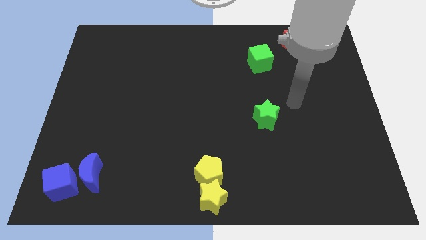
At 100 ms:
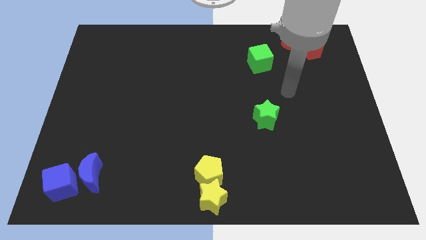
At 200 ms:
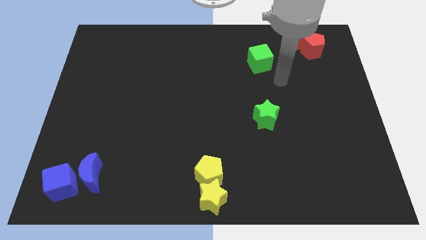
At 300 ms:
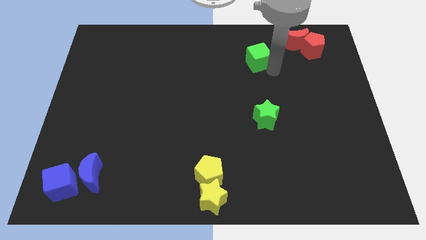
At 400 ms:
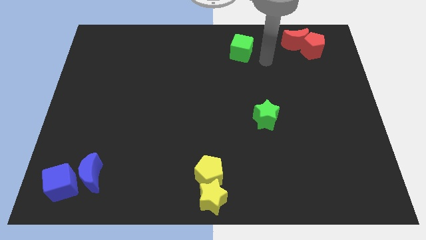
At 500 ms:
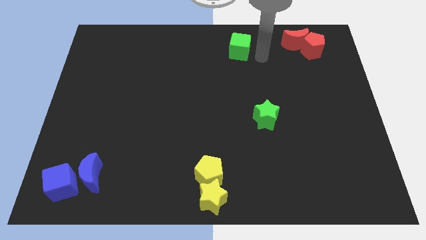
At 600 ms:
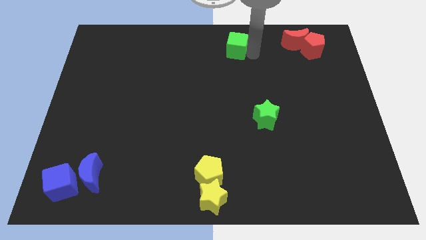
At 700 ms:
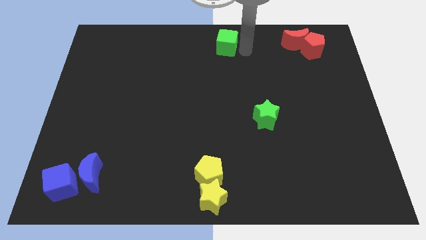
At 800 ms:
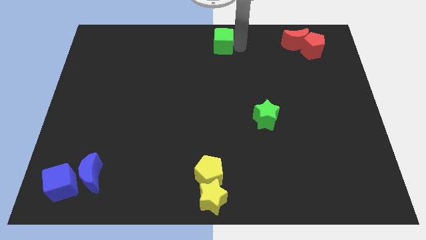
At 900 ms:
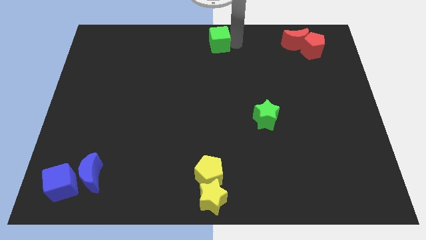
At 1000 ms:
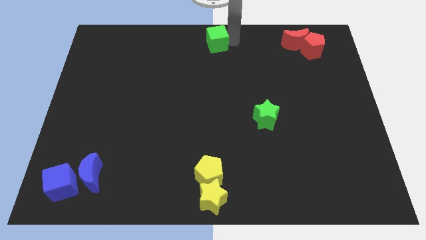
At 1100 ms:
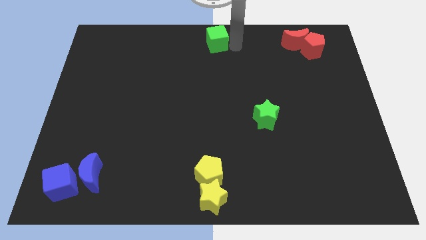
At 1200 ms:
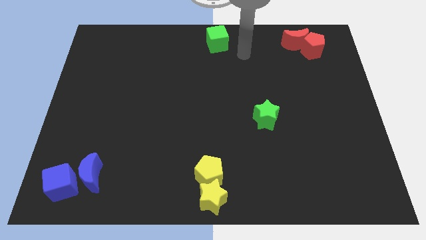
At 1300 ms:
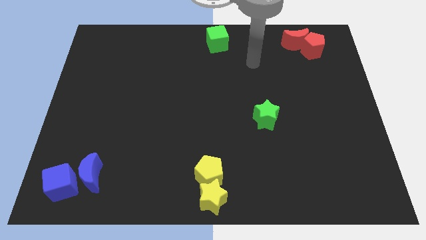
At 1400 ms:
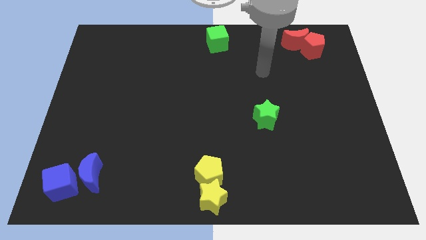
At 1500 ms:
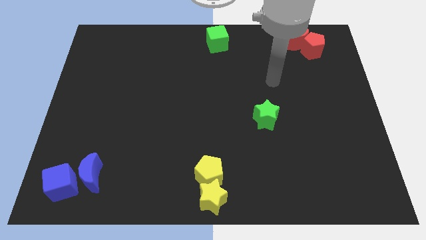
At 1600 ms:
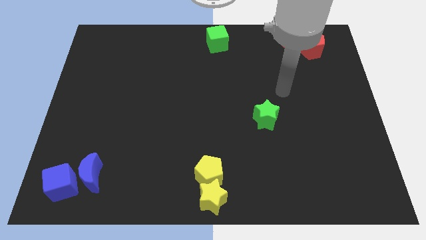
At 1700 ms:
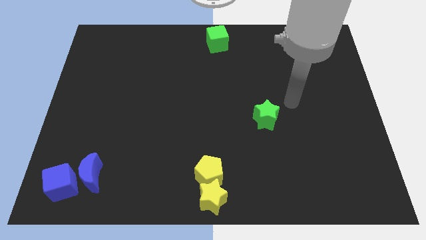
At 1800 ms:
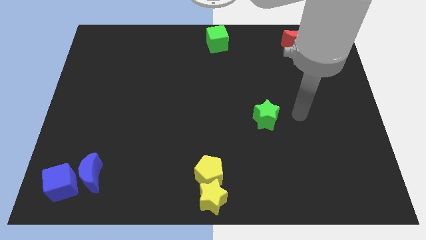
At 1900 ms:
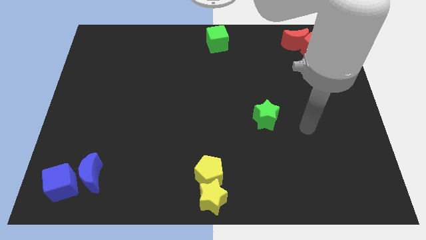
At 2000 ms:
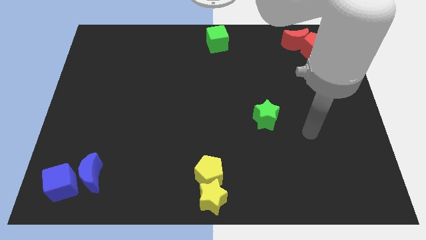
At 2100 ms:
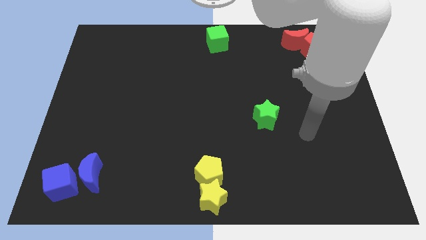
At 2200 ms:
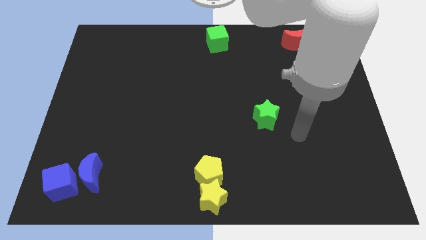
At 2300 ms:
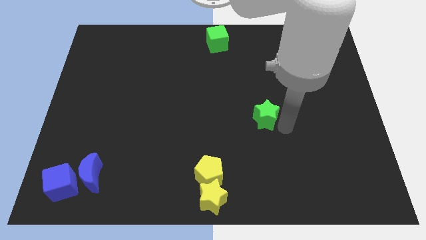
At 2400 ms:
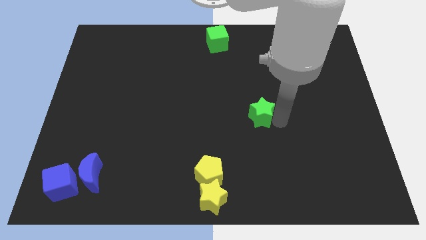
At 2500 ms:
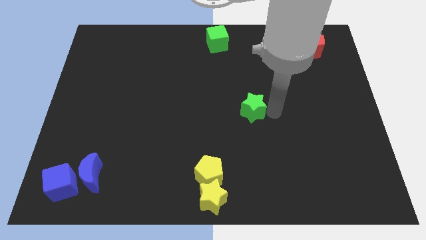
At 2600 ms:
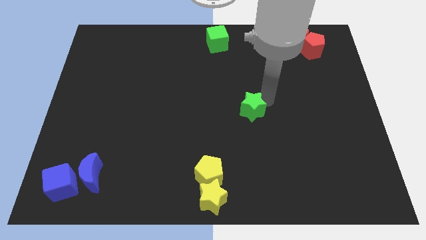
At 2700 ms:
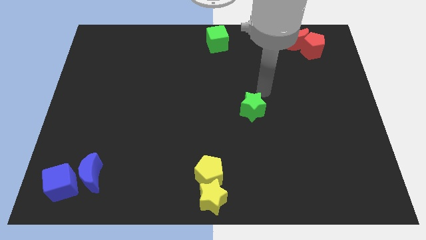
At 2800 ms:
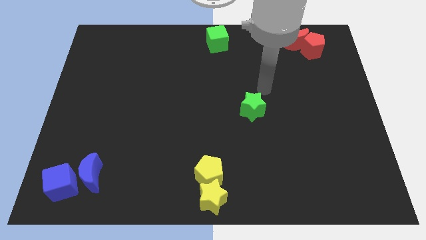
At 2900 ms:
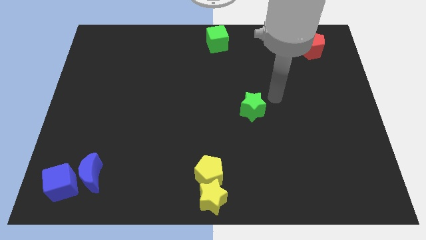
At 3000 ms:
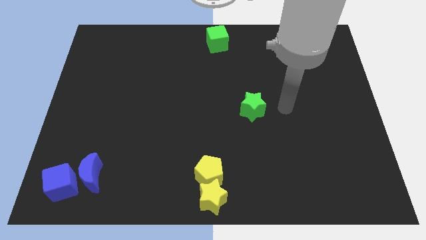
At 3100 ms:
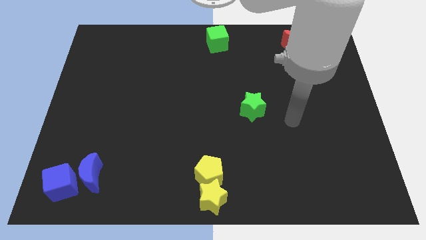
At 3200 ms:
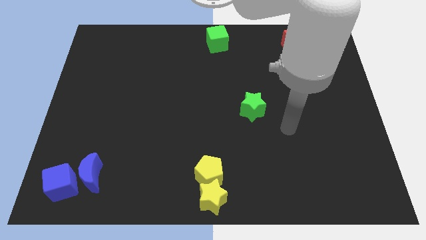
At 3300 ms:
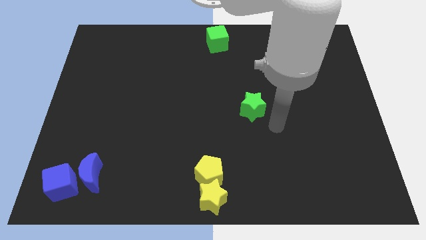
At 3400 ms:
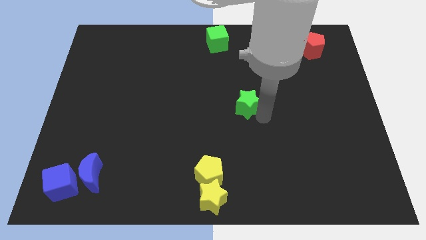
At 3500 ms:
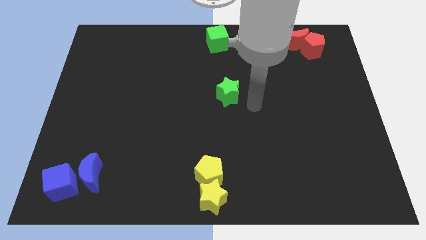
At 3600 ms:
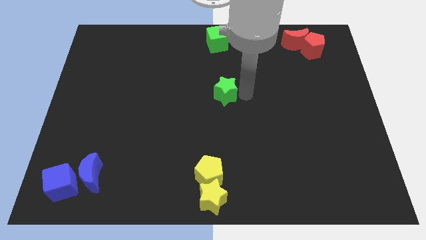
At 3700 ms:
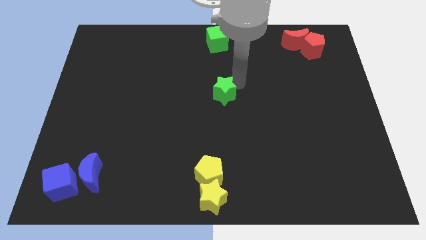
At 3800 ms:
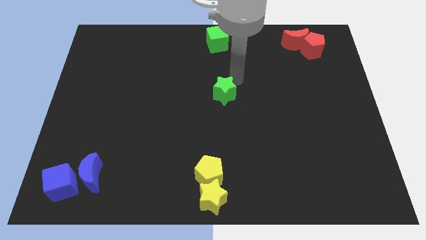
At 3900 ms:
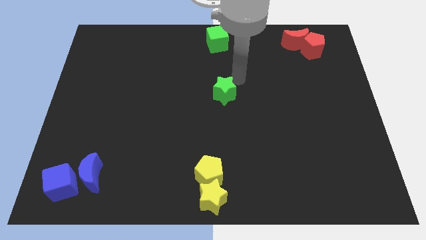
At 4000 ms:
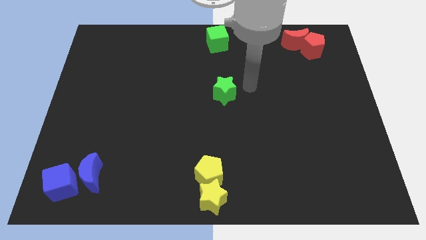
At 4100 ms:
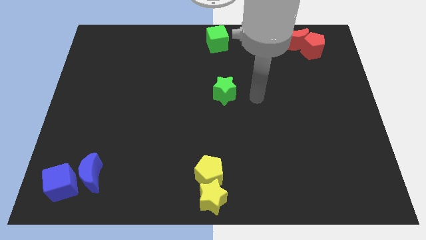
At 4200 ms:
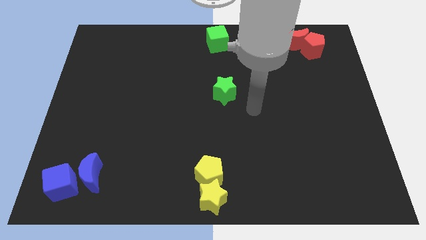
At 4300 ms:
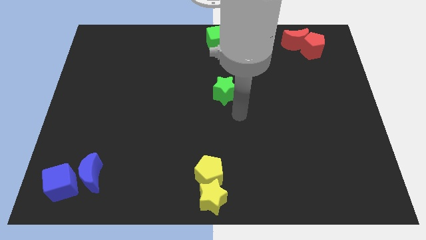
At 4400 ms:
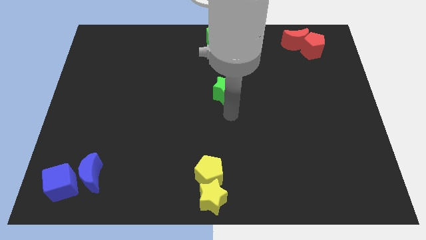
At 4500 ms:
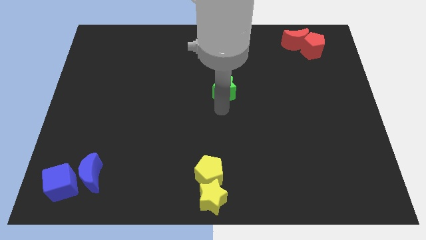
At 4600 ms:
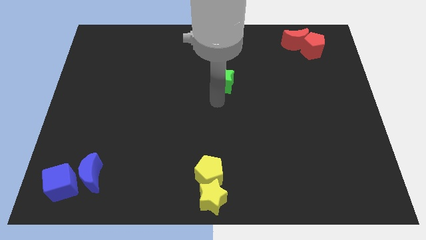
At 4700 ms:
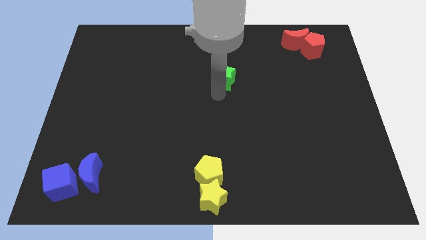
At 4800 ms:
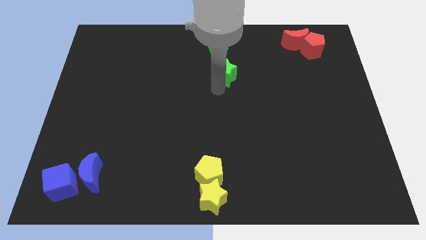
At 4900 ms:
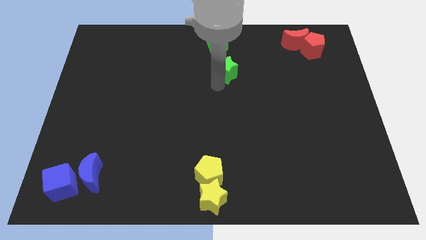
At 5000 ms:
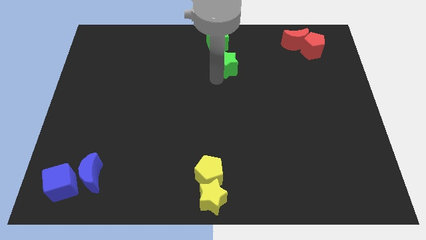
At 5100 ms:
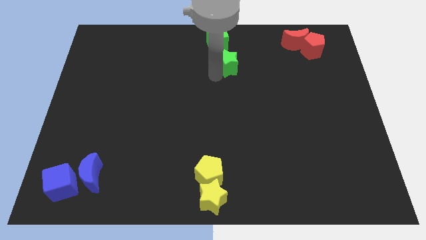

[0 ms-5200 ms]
move the green cube and the green star towards the center top of the board

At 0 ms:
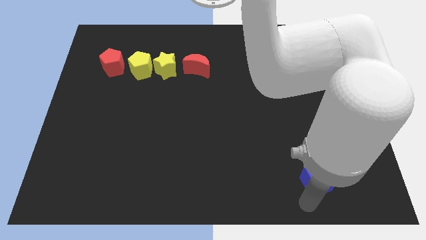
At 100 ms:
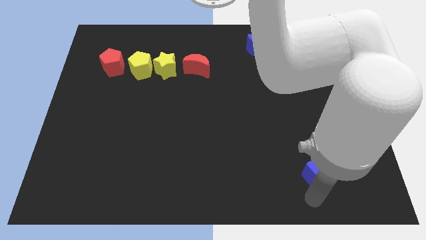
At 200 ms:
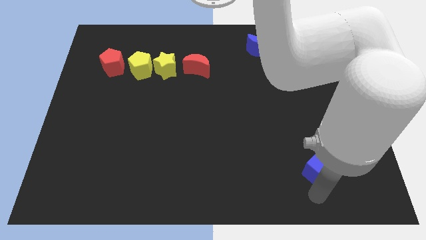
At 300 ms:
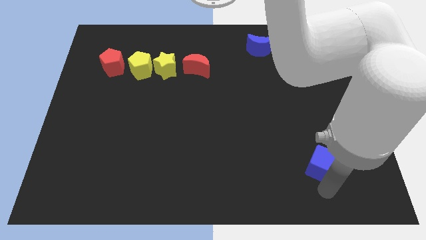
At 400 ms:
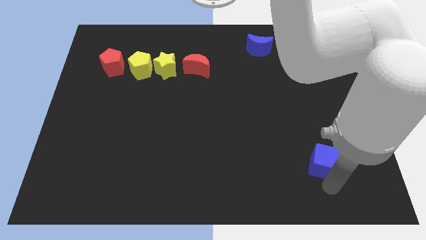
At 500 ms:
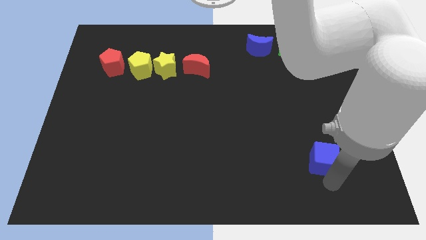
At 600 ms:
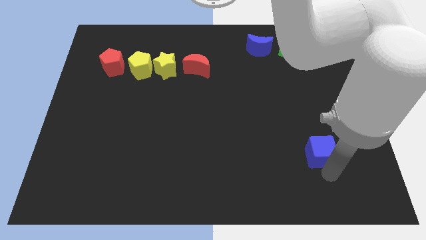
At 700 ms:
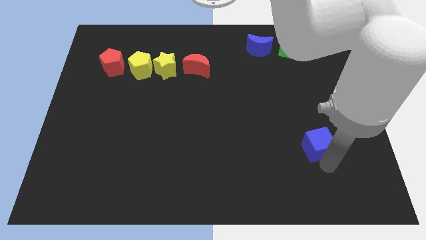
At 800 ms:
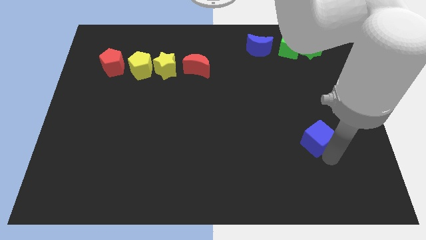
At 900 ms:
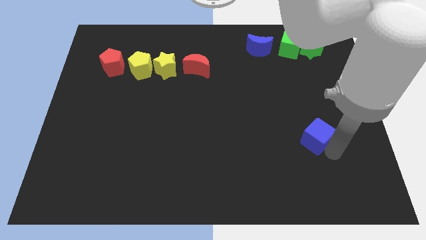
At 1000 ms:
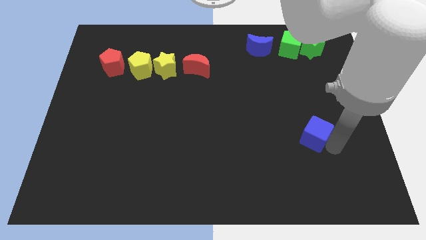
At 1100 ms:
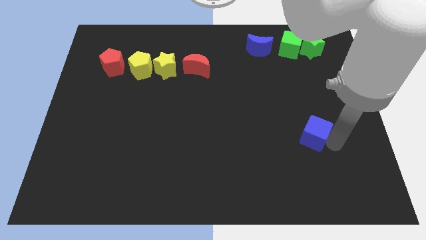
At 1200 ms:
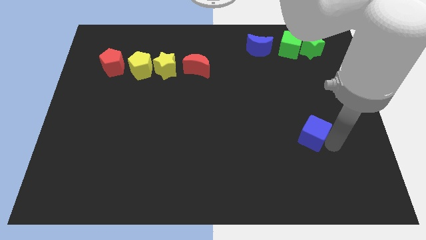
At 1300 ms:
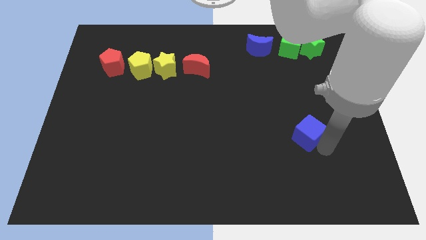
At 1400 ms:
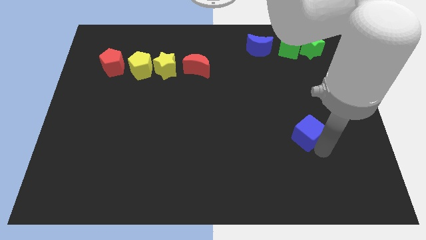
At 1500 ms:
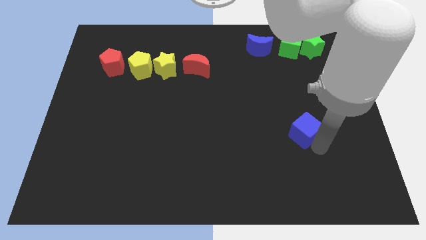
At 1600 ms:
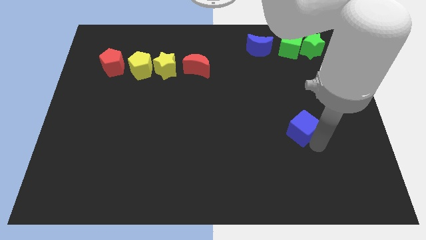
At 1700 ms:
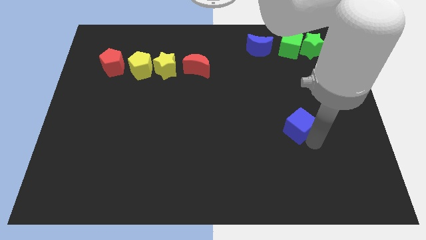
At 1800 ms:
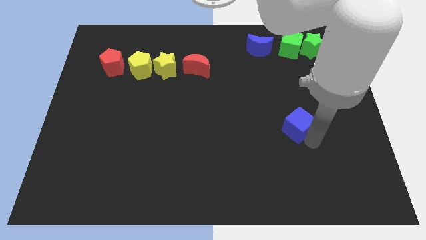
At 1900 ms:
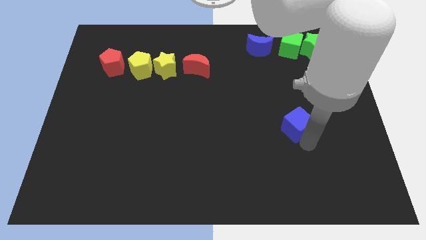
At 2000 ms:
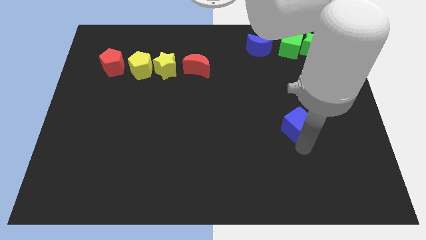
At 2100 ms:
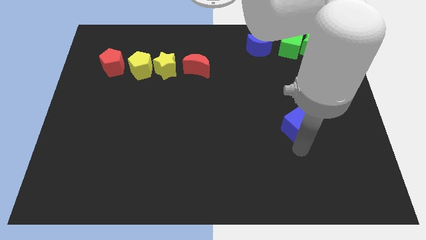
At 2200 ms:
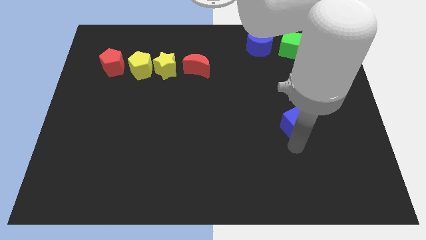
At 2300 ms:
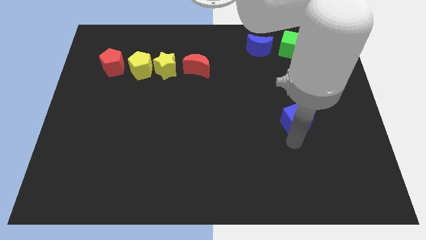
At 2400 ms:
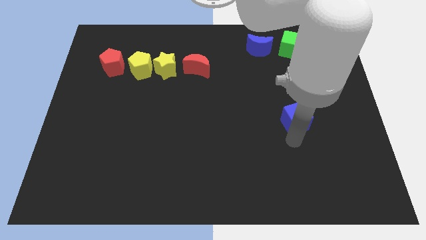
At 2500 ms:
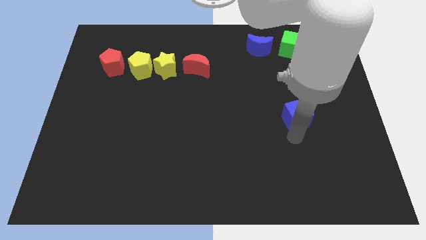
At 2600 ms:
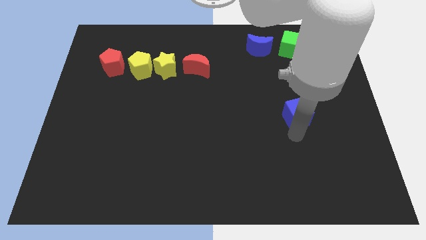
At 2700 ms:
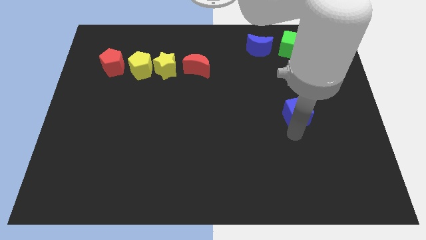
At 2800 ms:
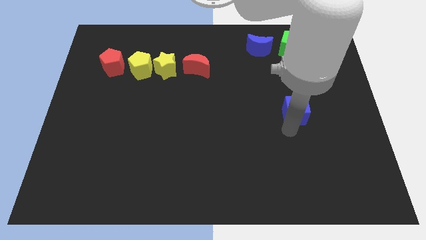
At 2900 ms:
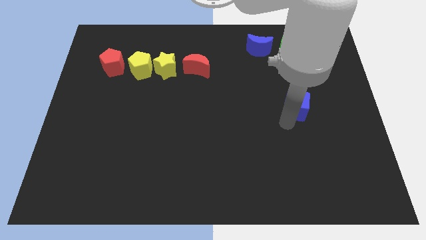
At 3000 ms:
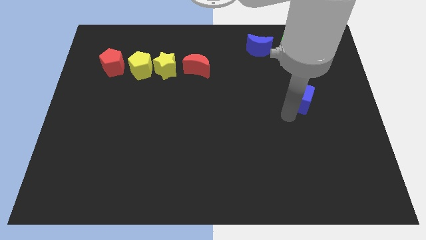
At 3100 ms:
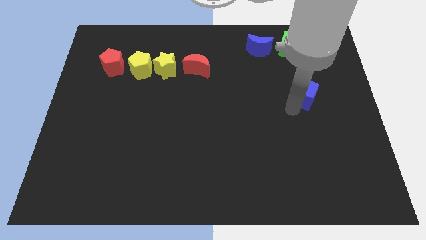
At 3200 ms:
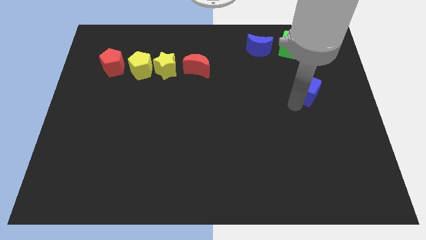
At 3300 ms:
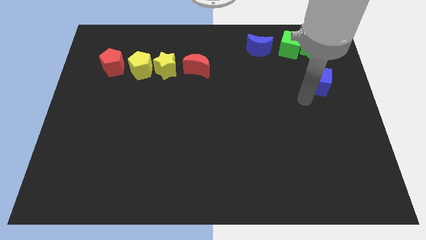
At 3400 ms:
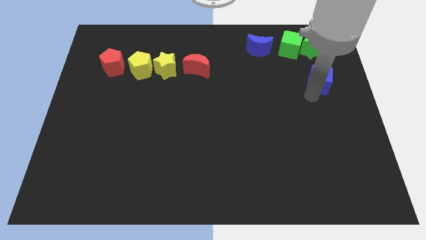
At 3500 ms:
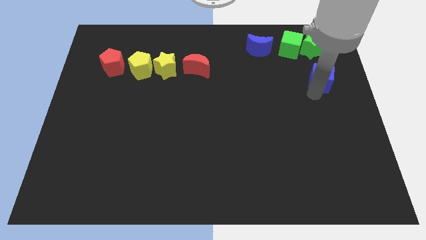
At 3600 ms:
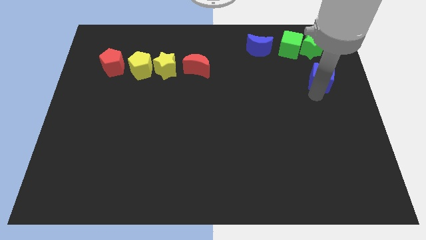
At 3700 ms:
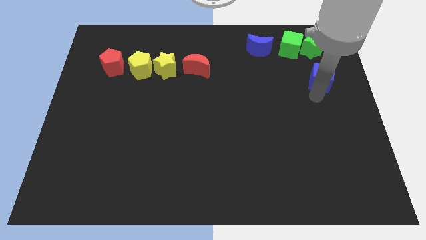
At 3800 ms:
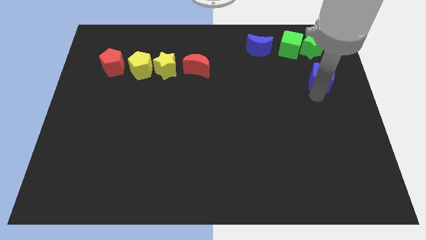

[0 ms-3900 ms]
place the blue cube below the green star
